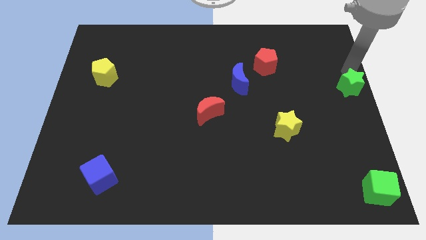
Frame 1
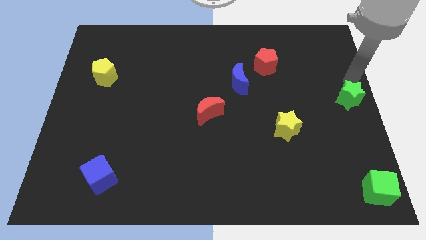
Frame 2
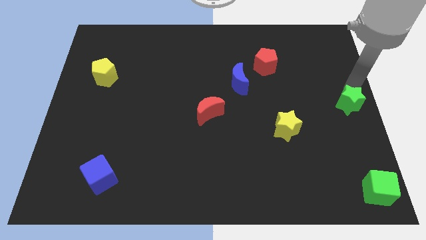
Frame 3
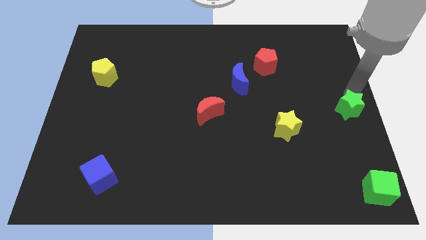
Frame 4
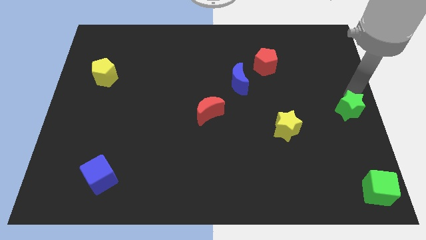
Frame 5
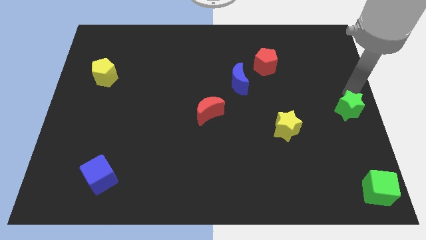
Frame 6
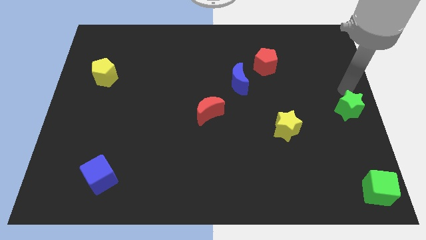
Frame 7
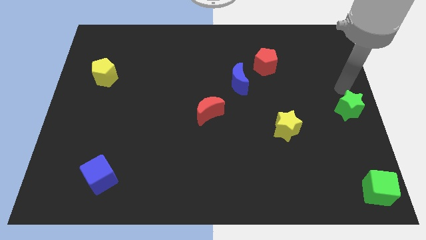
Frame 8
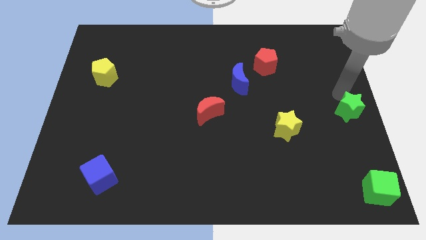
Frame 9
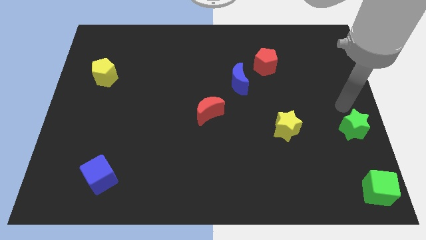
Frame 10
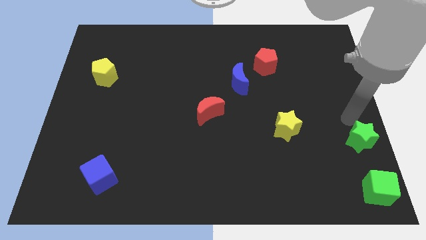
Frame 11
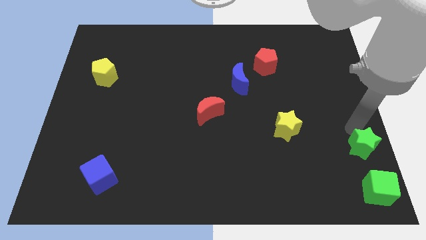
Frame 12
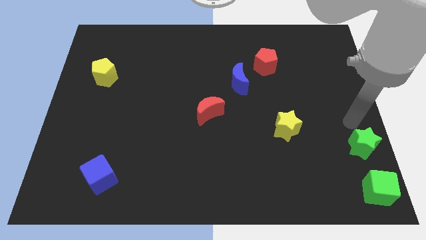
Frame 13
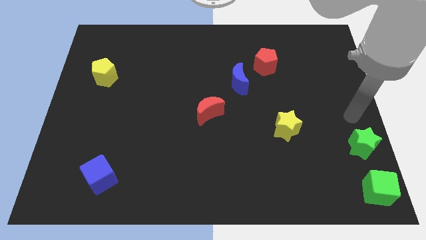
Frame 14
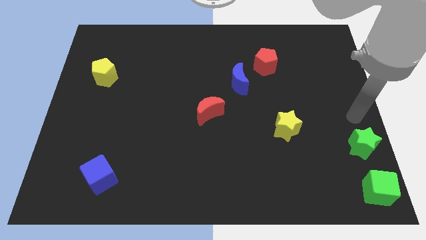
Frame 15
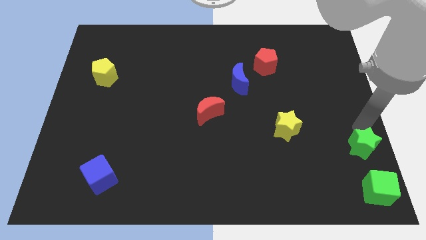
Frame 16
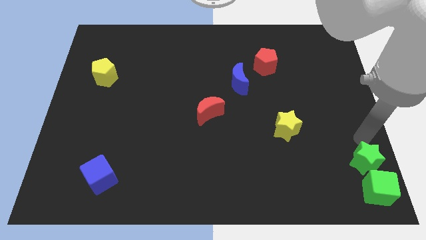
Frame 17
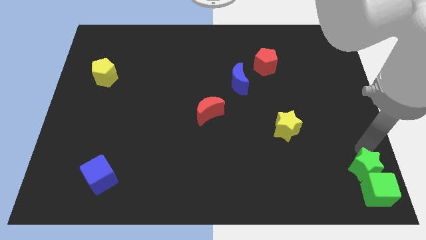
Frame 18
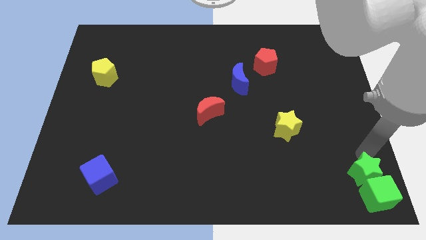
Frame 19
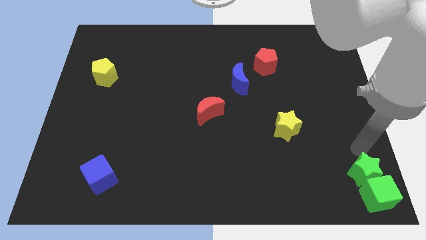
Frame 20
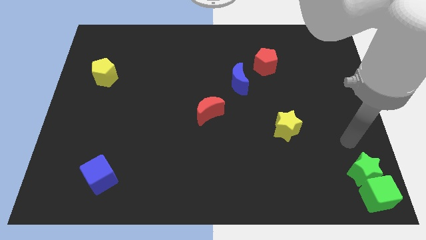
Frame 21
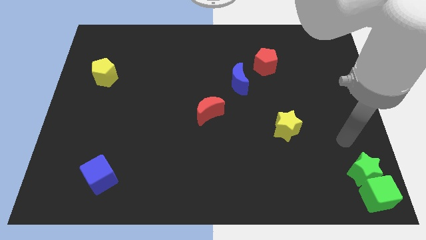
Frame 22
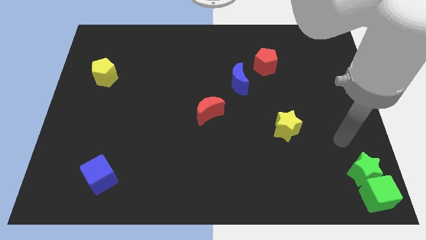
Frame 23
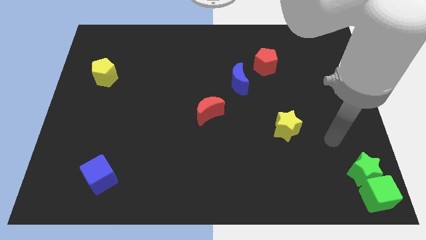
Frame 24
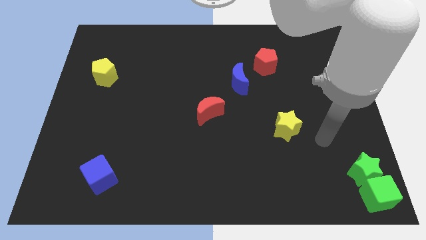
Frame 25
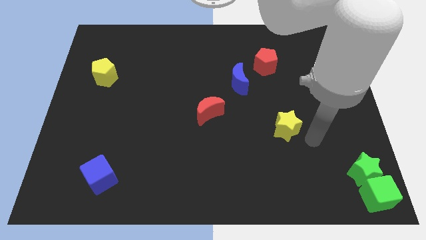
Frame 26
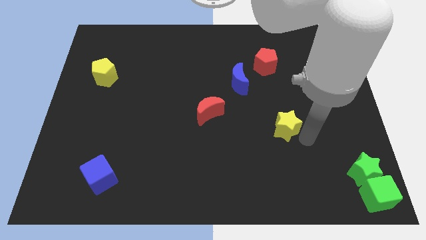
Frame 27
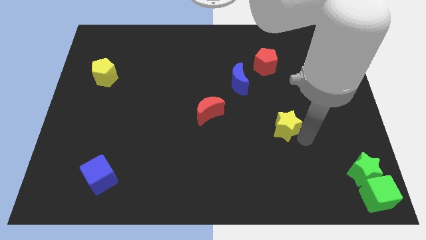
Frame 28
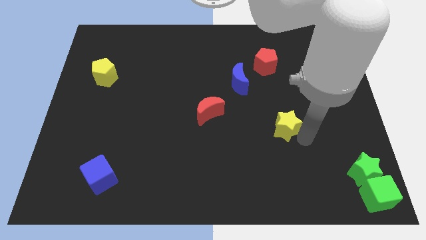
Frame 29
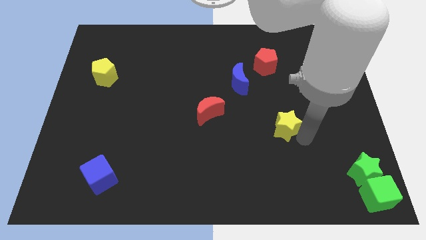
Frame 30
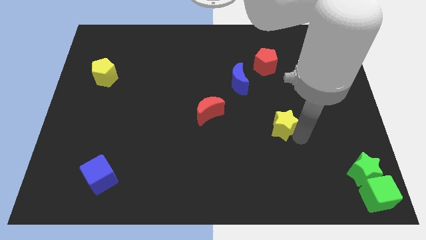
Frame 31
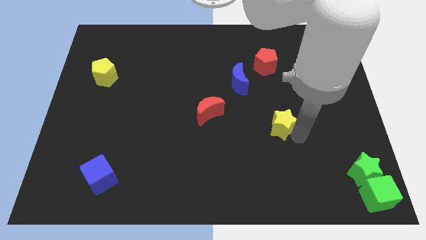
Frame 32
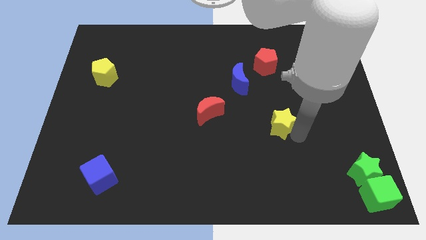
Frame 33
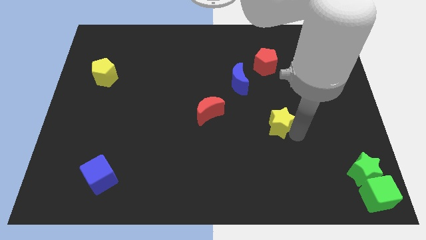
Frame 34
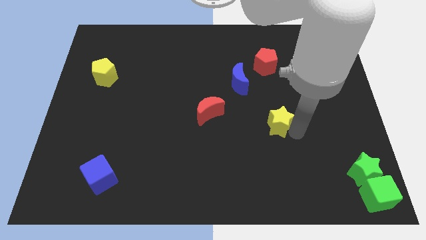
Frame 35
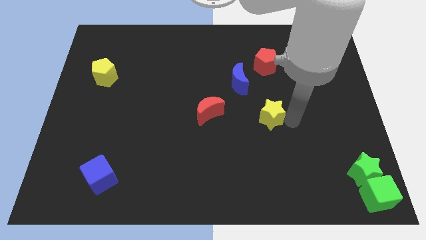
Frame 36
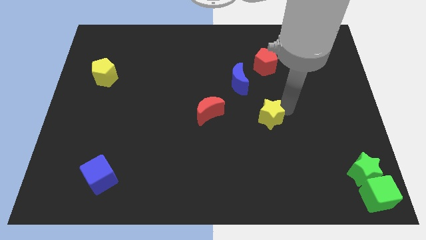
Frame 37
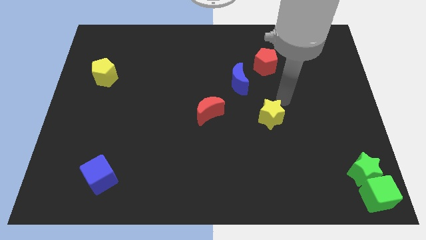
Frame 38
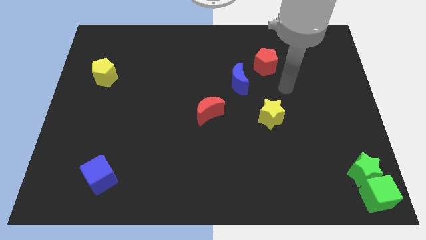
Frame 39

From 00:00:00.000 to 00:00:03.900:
place the yellow star down to the red pentagon

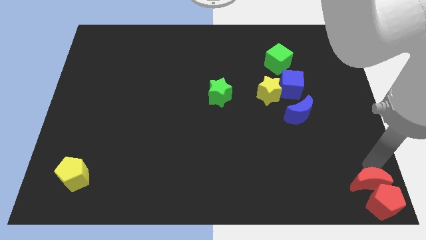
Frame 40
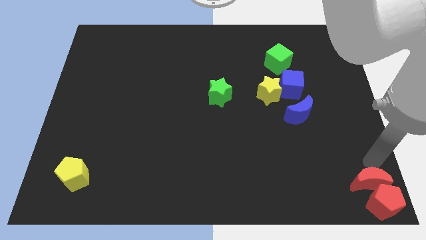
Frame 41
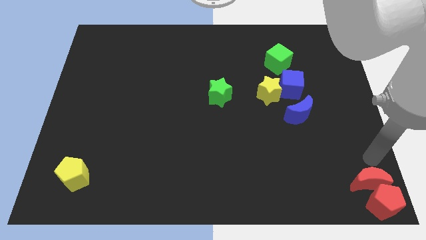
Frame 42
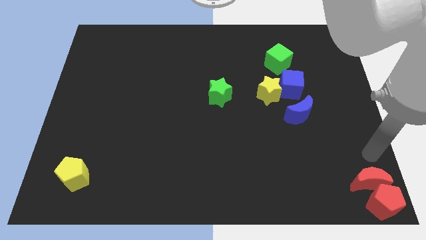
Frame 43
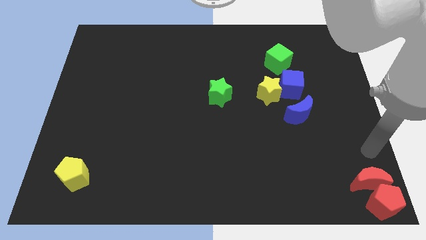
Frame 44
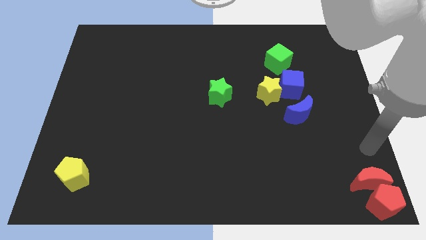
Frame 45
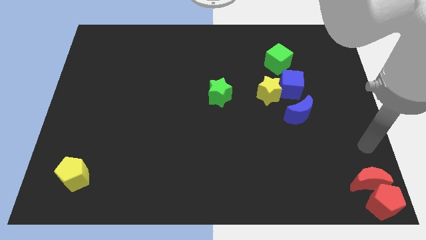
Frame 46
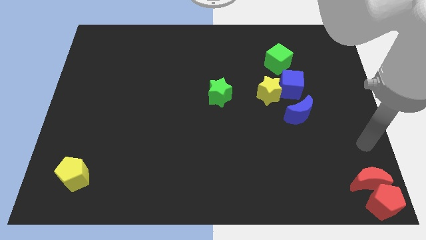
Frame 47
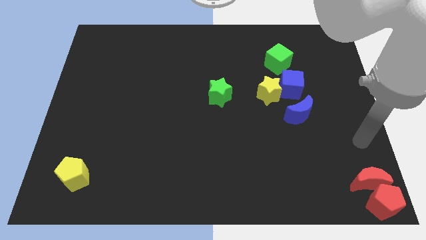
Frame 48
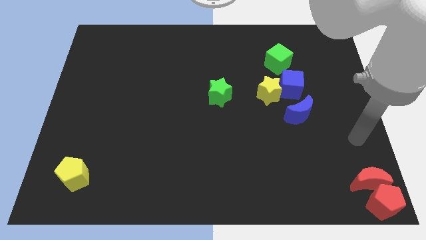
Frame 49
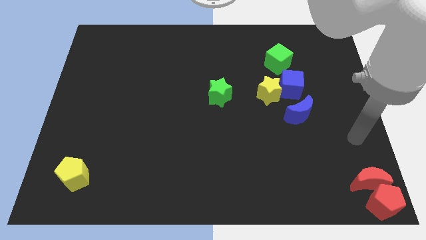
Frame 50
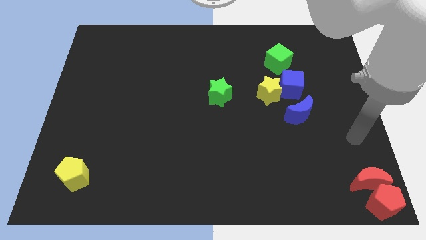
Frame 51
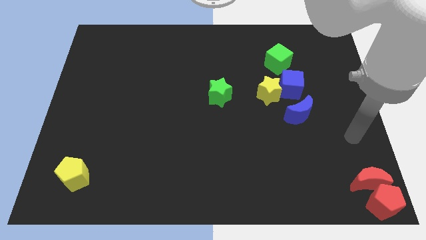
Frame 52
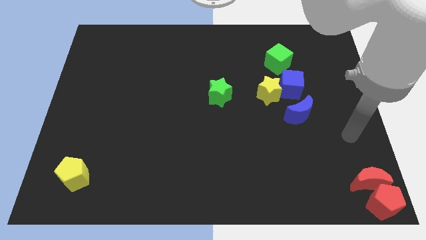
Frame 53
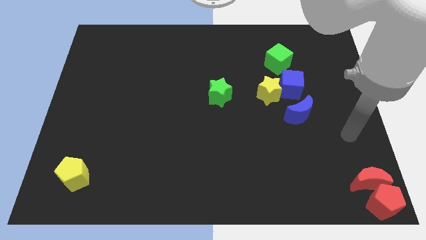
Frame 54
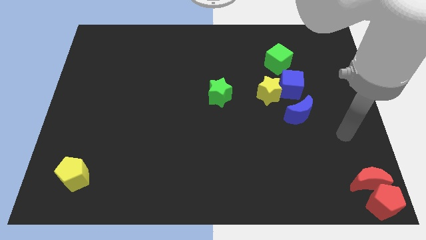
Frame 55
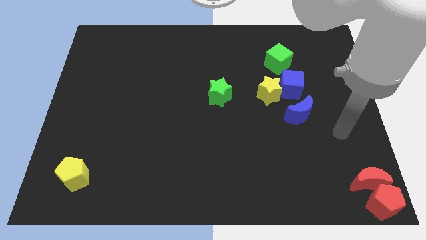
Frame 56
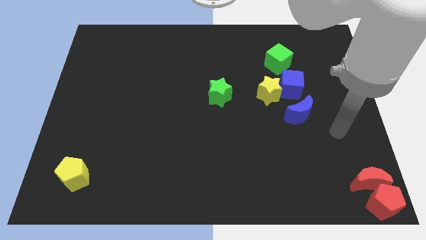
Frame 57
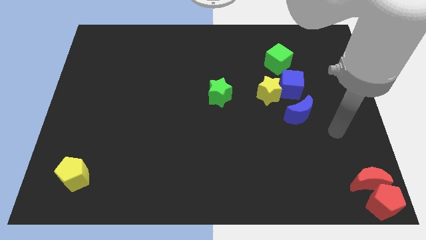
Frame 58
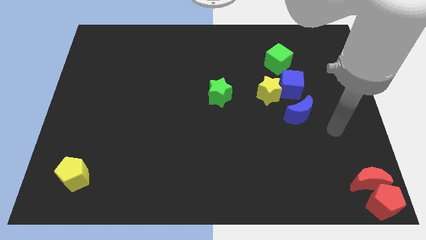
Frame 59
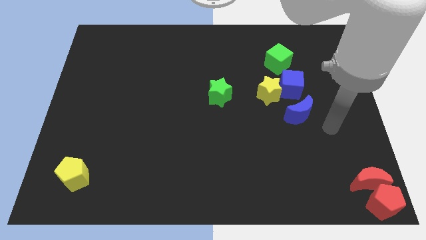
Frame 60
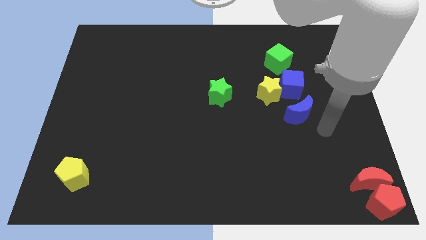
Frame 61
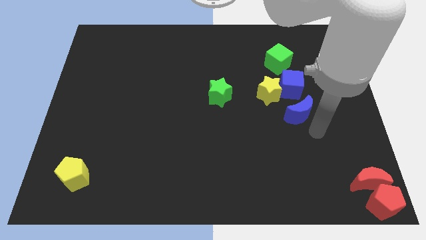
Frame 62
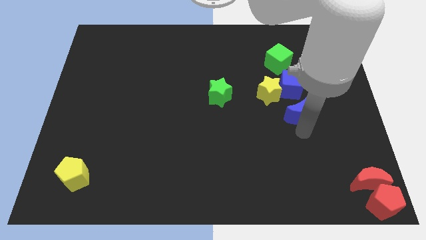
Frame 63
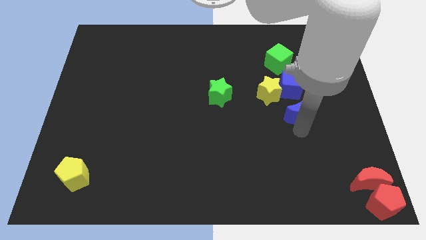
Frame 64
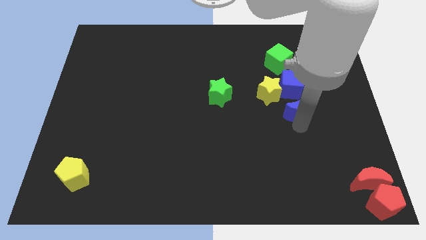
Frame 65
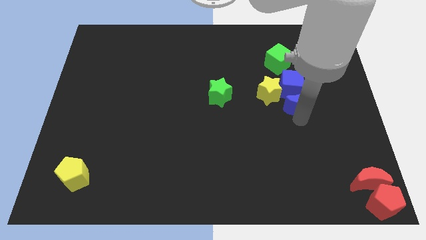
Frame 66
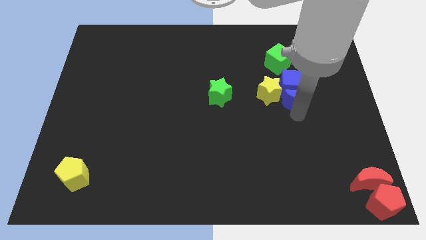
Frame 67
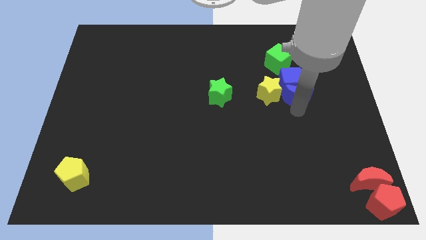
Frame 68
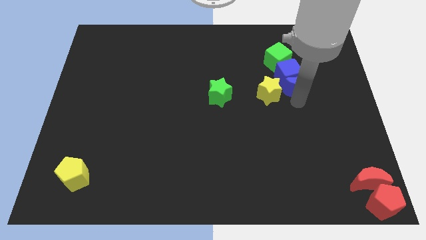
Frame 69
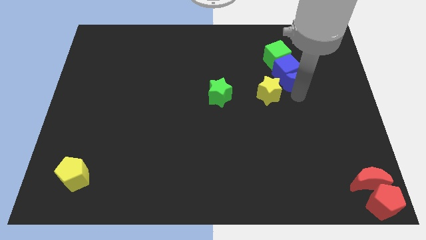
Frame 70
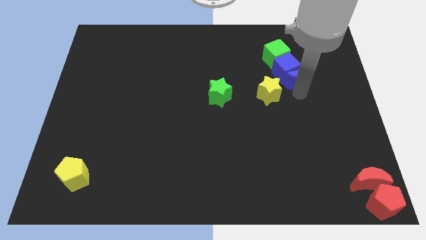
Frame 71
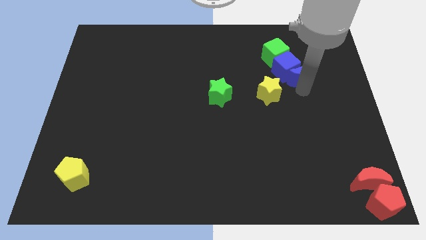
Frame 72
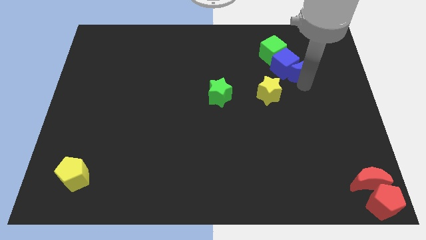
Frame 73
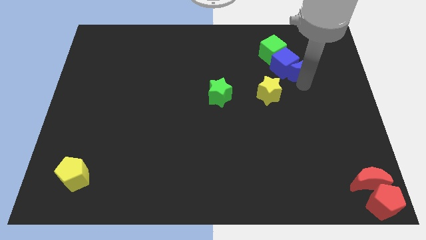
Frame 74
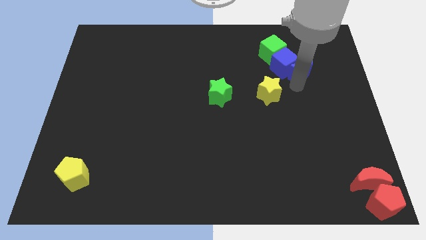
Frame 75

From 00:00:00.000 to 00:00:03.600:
move the green cube and blue cube with the blue crescent towards the top center

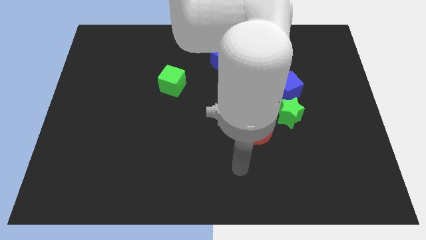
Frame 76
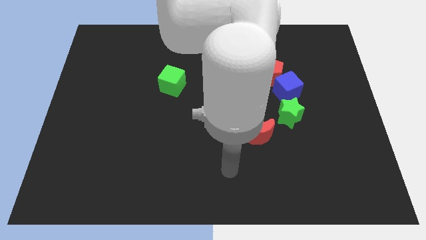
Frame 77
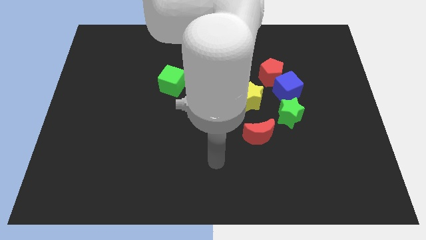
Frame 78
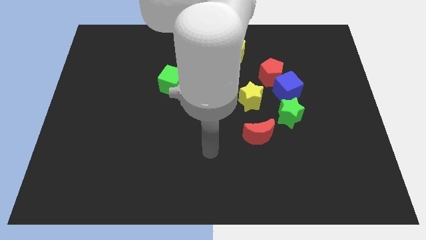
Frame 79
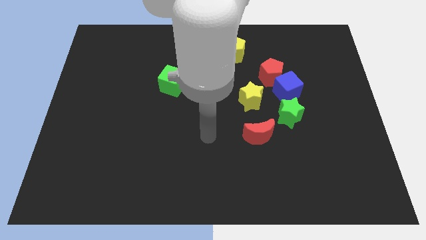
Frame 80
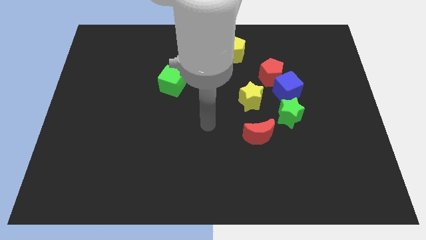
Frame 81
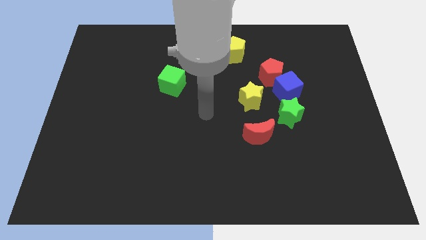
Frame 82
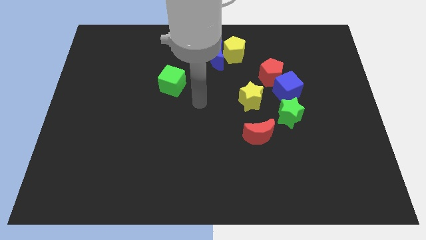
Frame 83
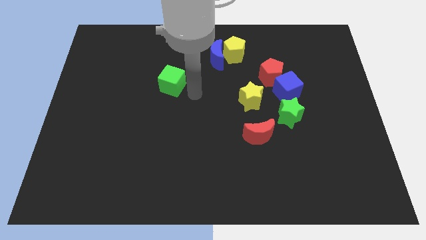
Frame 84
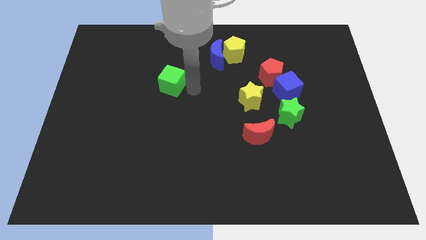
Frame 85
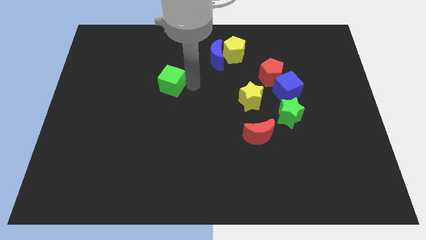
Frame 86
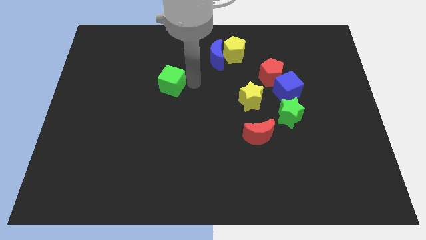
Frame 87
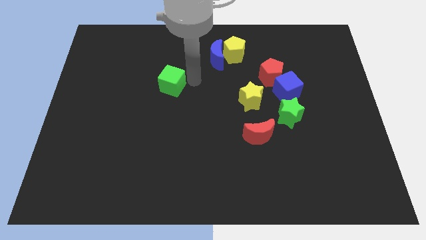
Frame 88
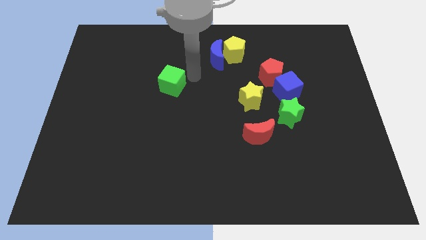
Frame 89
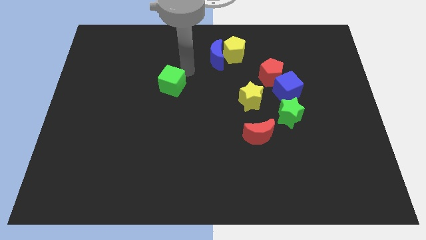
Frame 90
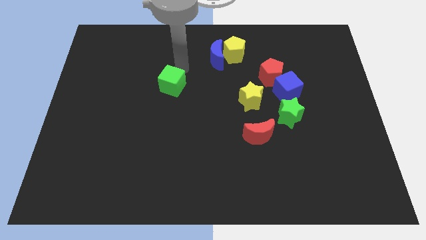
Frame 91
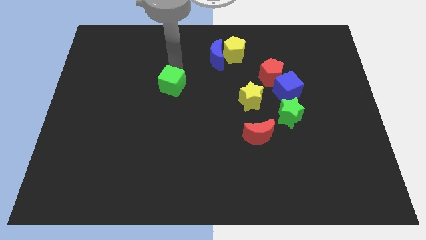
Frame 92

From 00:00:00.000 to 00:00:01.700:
point the arm above the green cube
